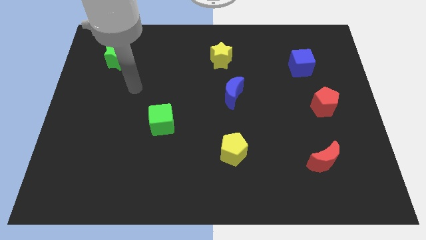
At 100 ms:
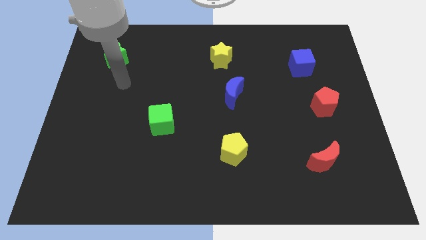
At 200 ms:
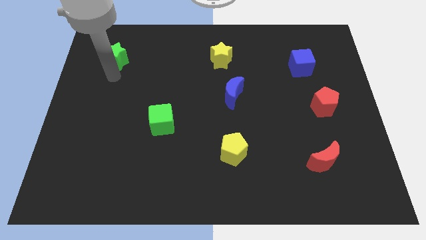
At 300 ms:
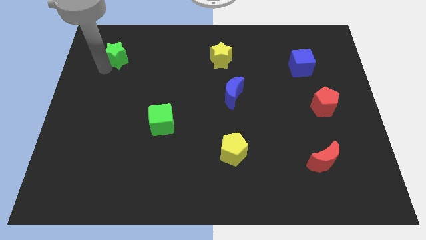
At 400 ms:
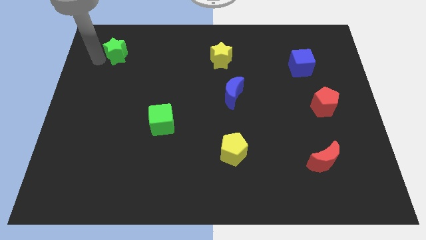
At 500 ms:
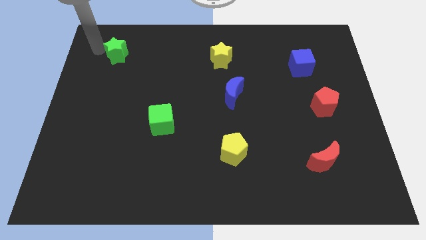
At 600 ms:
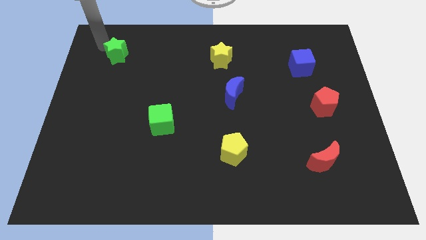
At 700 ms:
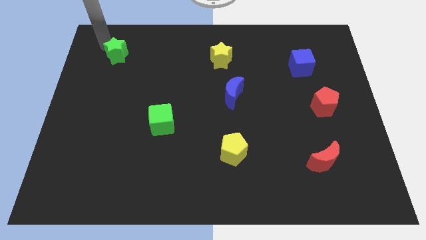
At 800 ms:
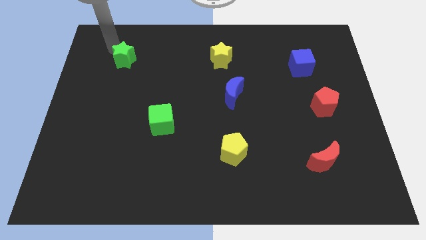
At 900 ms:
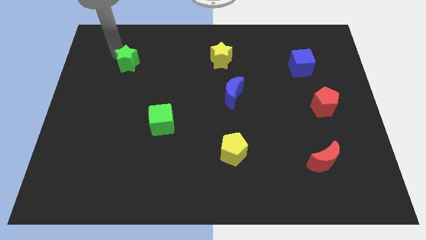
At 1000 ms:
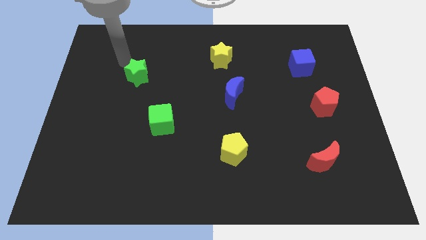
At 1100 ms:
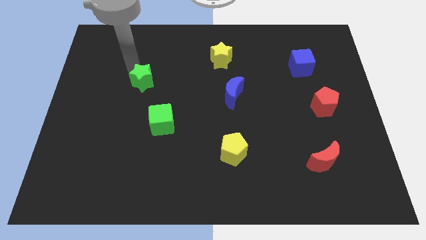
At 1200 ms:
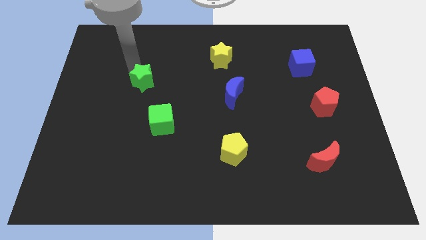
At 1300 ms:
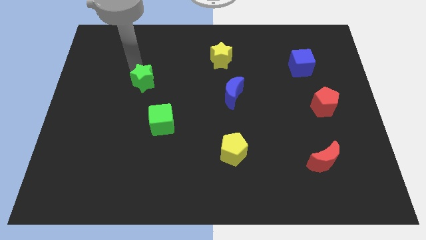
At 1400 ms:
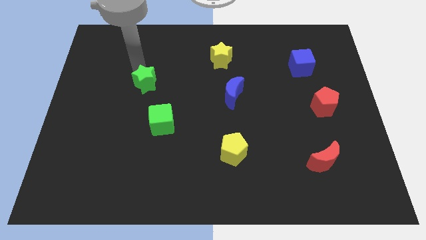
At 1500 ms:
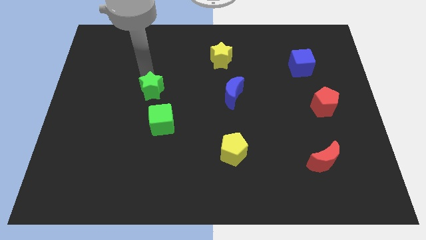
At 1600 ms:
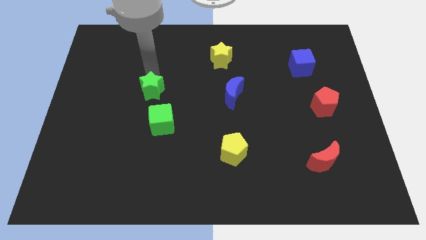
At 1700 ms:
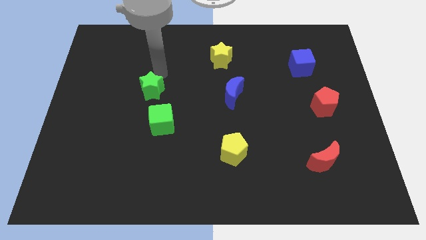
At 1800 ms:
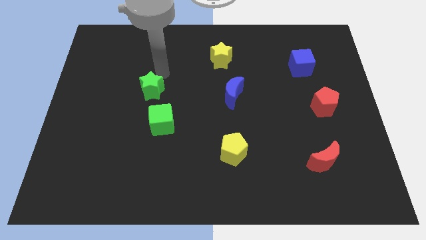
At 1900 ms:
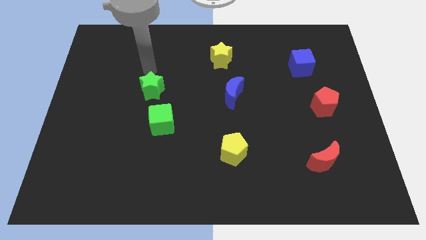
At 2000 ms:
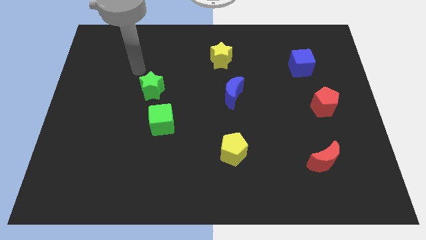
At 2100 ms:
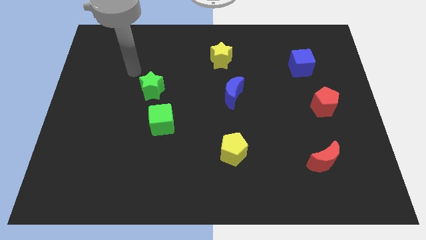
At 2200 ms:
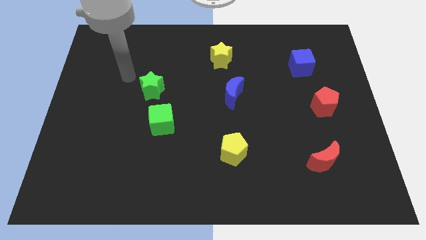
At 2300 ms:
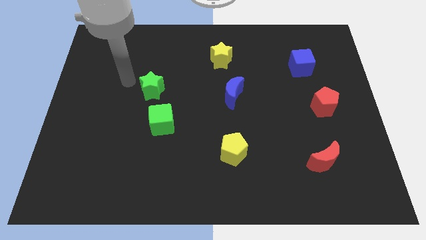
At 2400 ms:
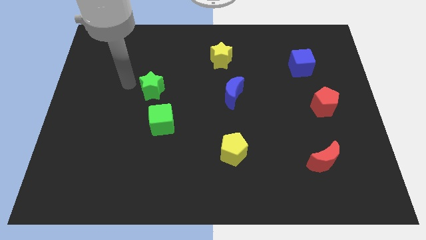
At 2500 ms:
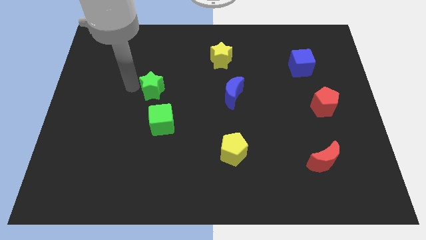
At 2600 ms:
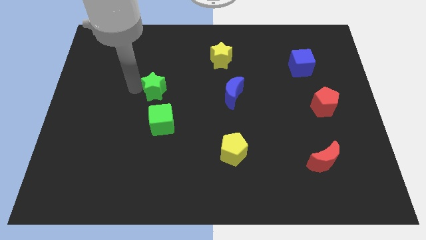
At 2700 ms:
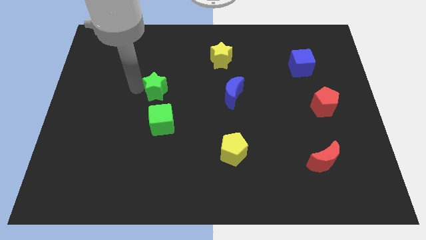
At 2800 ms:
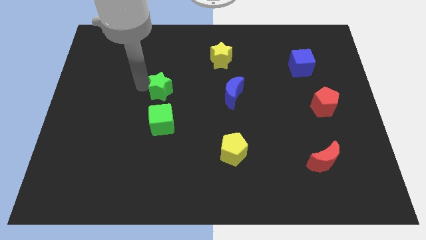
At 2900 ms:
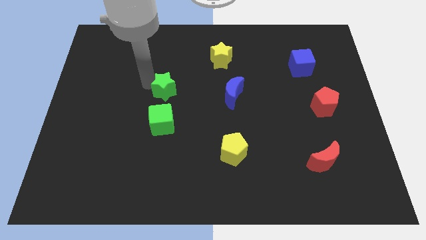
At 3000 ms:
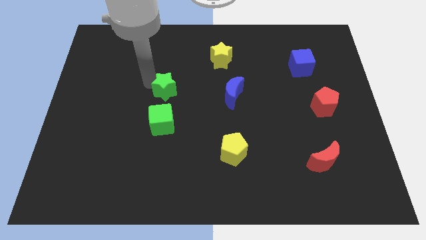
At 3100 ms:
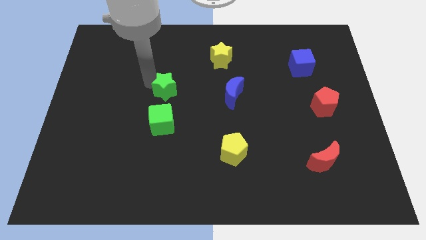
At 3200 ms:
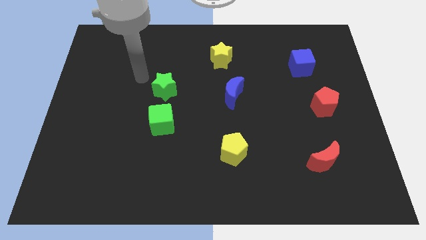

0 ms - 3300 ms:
push the green star to the top side of the green cube

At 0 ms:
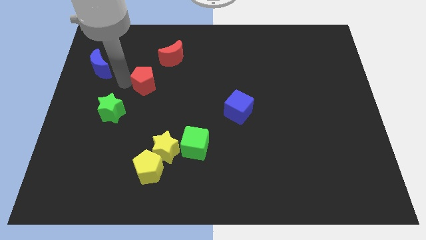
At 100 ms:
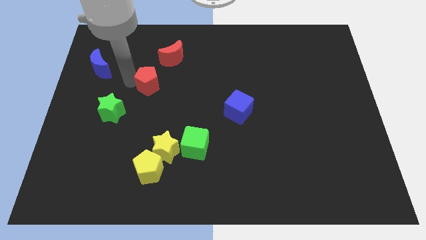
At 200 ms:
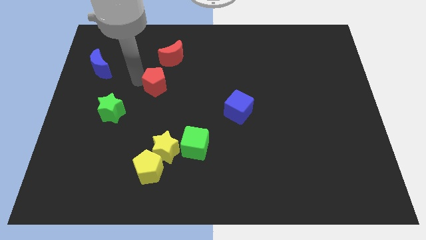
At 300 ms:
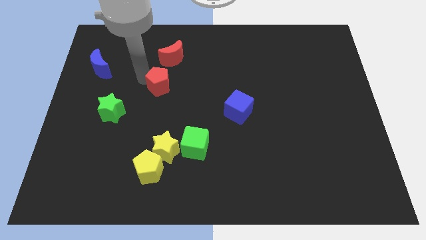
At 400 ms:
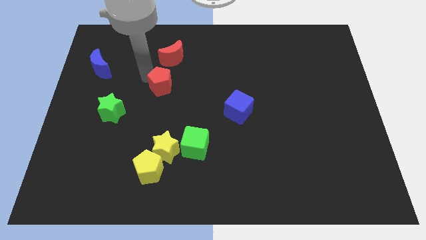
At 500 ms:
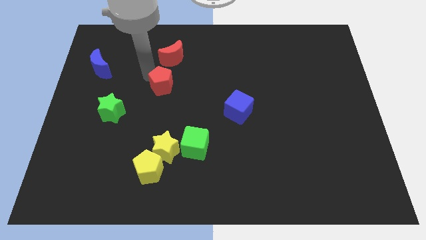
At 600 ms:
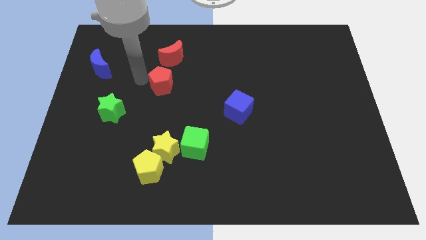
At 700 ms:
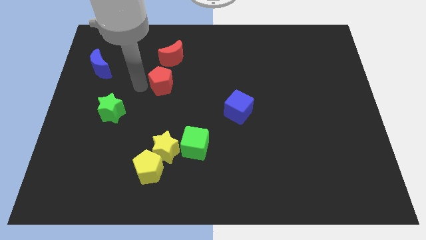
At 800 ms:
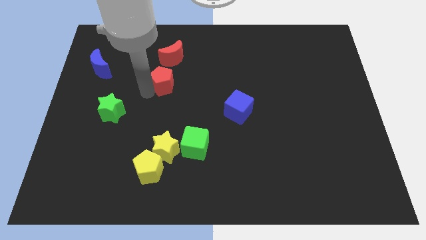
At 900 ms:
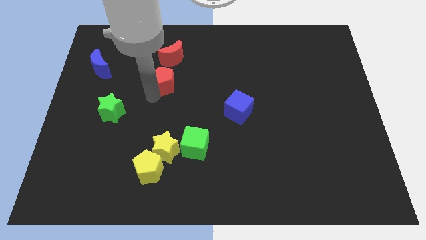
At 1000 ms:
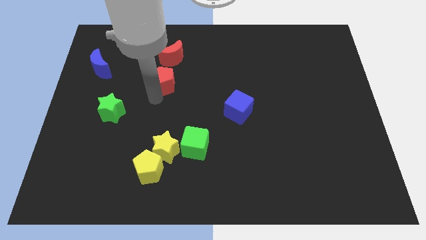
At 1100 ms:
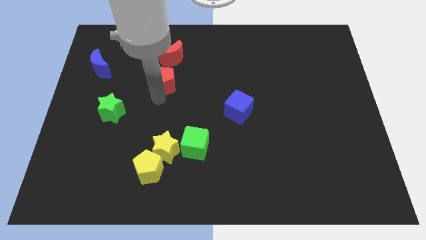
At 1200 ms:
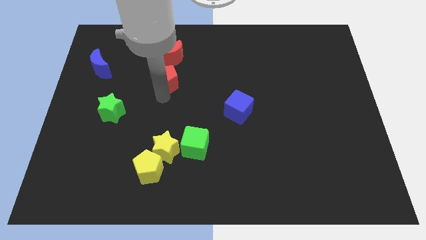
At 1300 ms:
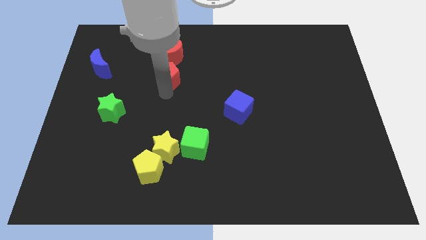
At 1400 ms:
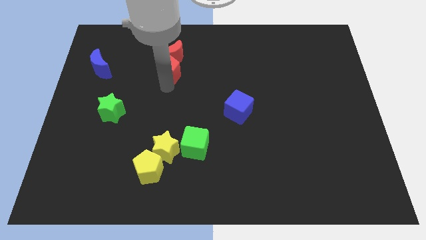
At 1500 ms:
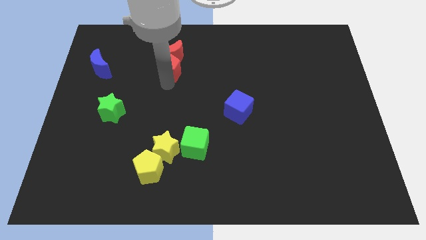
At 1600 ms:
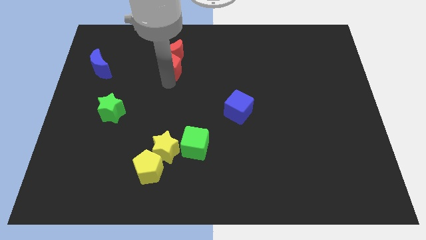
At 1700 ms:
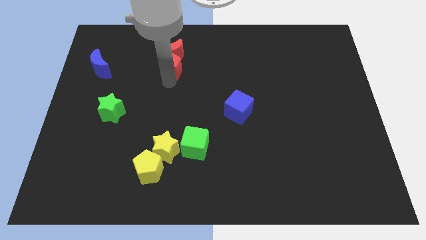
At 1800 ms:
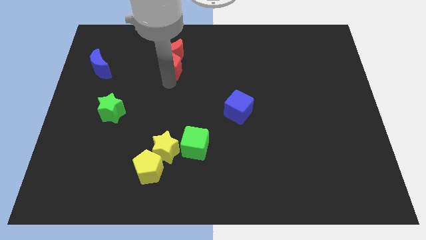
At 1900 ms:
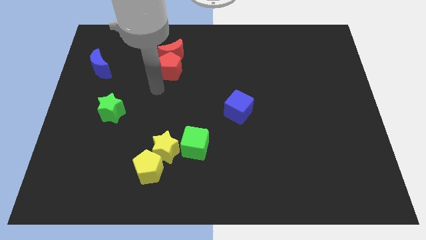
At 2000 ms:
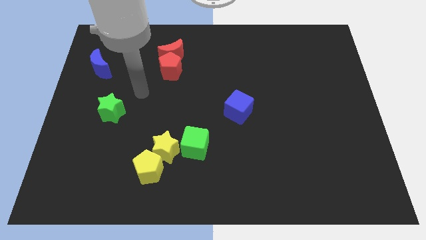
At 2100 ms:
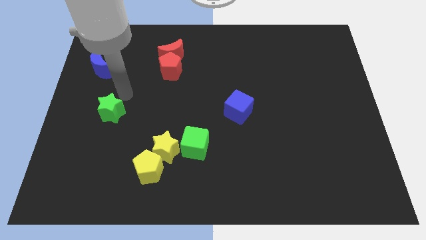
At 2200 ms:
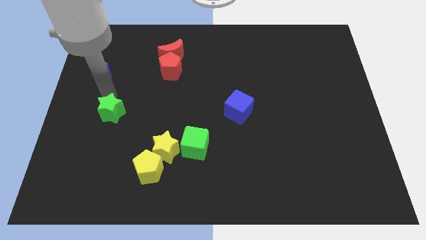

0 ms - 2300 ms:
place the red pentagon below into red moon

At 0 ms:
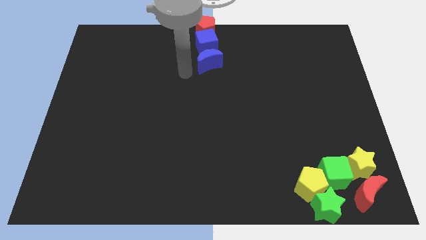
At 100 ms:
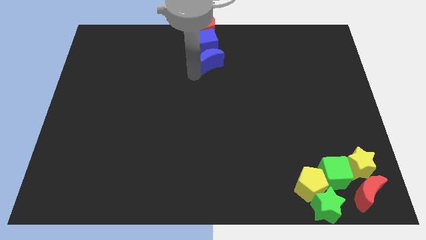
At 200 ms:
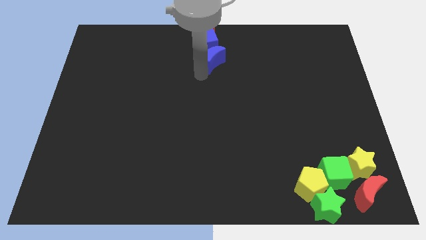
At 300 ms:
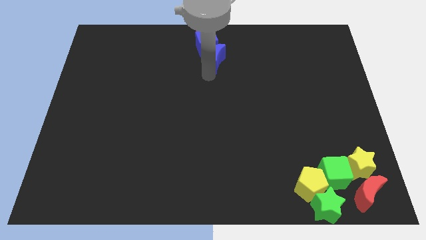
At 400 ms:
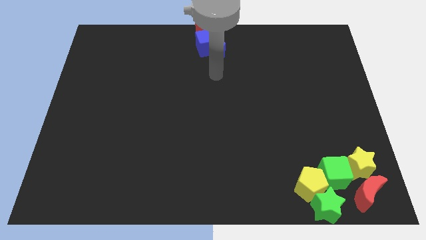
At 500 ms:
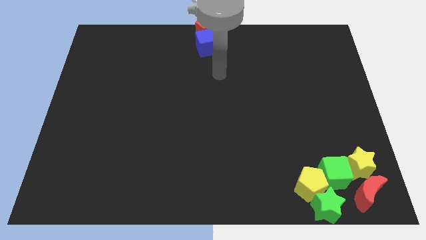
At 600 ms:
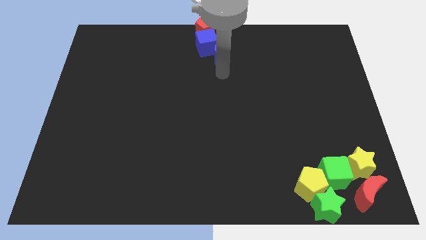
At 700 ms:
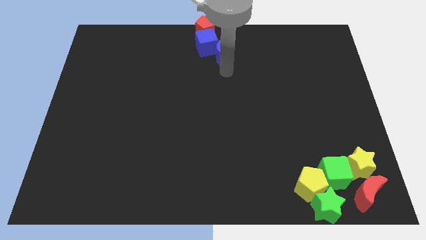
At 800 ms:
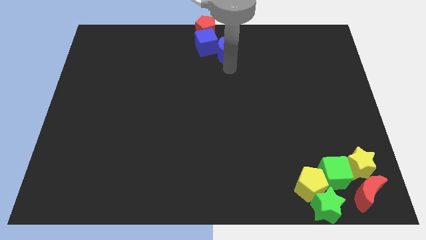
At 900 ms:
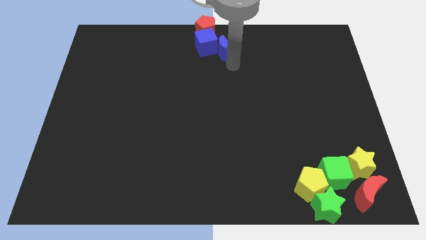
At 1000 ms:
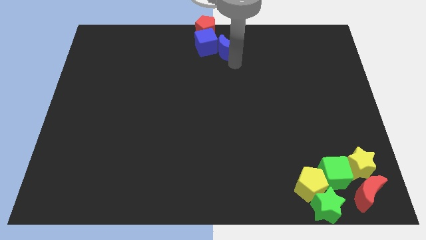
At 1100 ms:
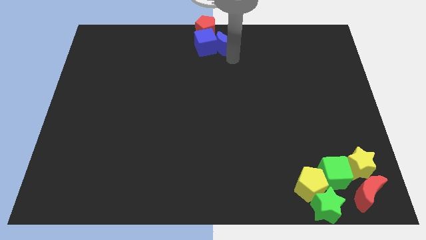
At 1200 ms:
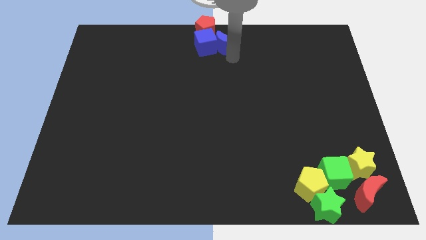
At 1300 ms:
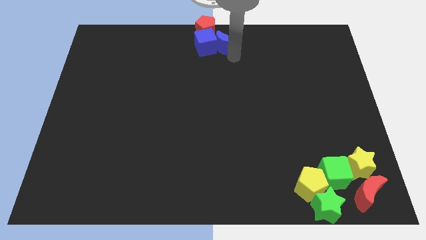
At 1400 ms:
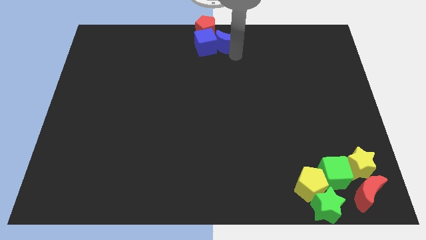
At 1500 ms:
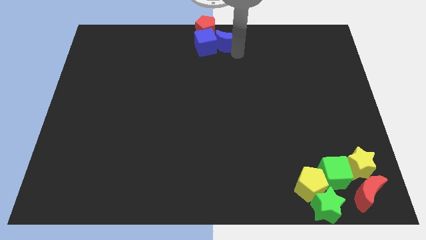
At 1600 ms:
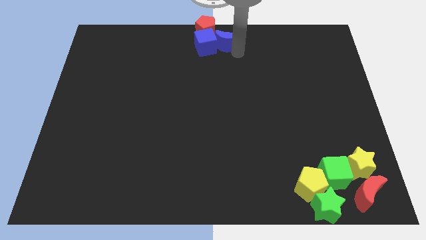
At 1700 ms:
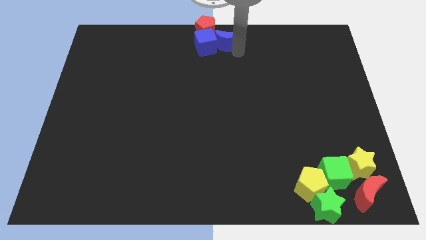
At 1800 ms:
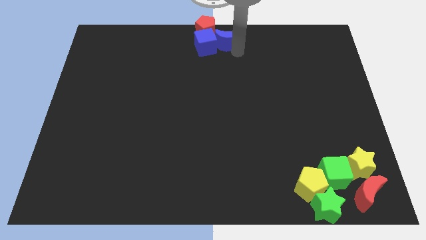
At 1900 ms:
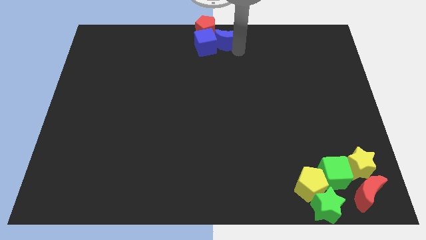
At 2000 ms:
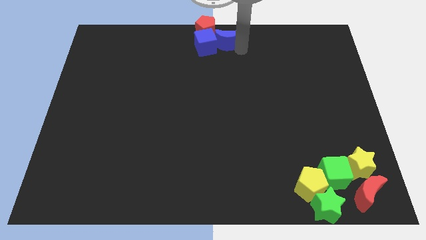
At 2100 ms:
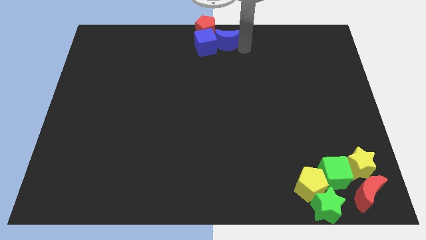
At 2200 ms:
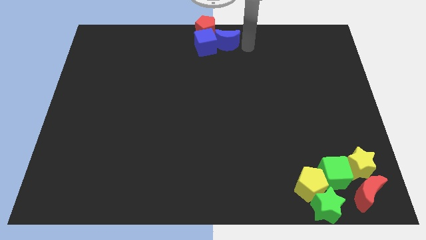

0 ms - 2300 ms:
push the blue crescent right to the blue cube

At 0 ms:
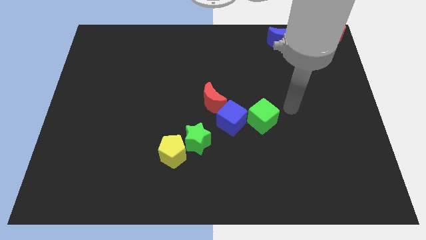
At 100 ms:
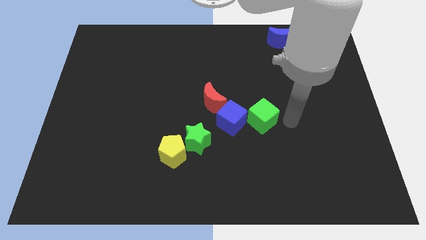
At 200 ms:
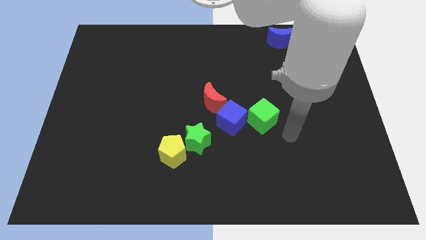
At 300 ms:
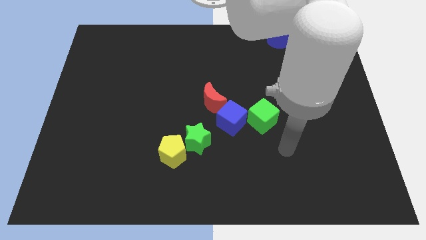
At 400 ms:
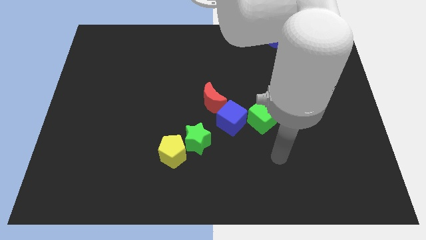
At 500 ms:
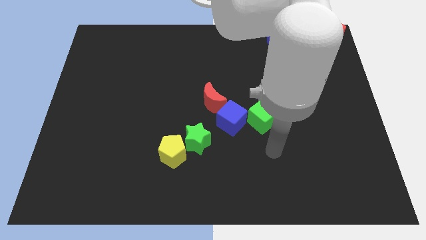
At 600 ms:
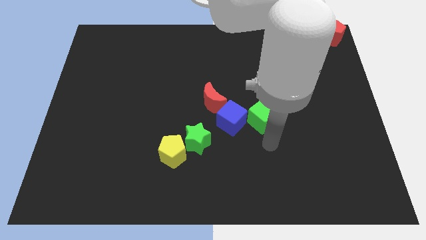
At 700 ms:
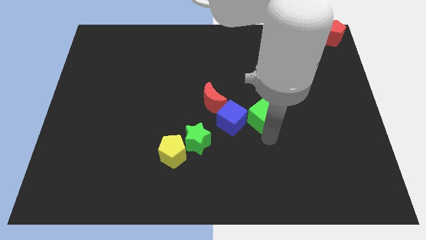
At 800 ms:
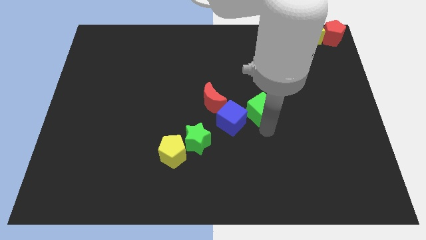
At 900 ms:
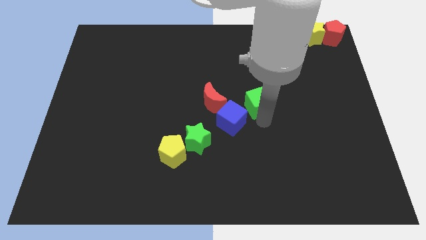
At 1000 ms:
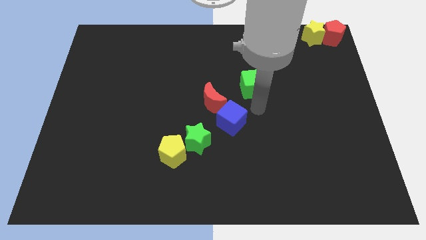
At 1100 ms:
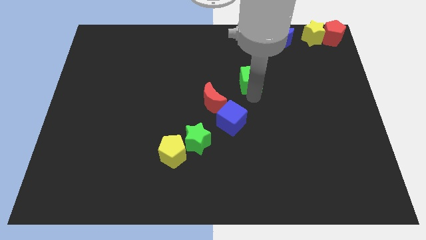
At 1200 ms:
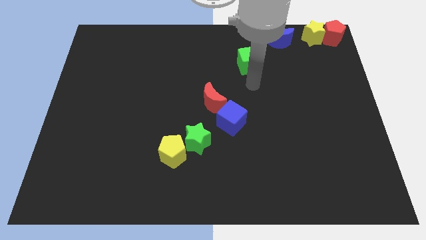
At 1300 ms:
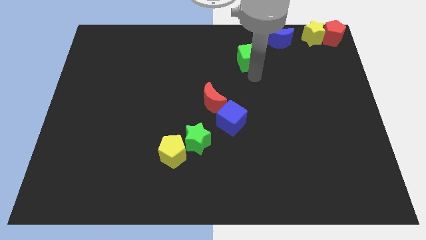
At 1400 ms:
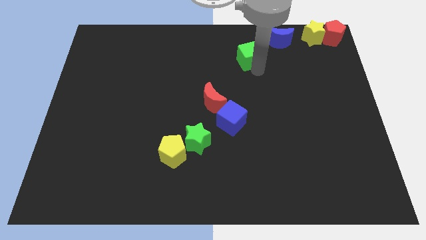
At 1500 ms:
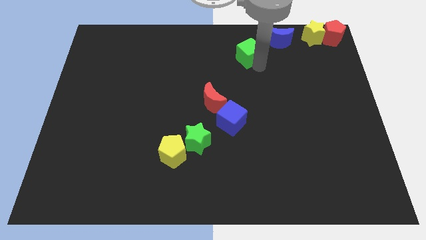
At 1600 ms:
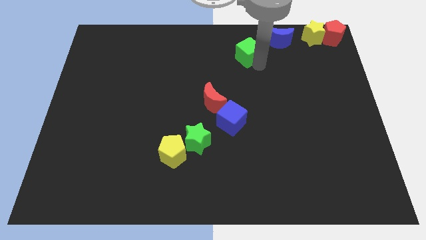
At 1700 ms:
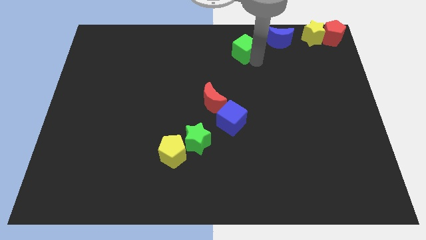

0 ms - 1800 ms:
separate the green cube from the blue cube
